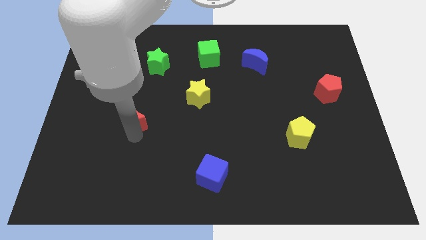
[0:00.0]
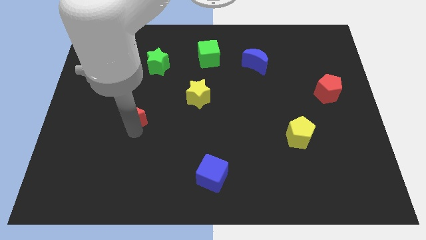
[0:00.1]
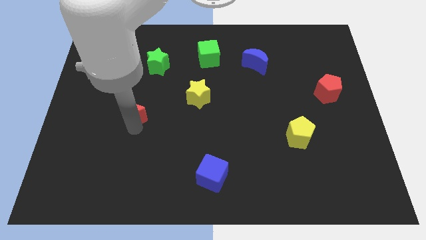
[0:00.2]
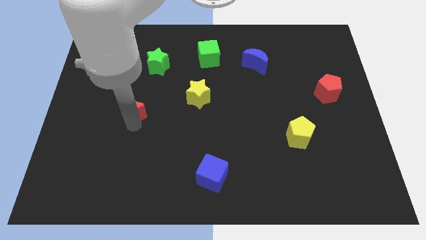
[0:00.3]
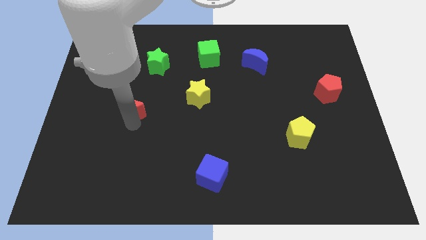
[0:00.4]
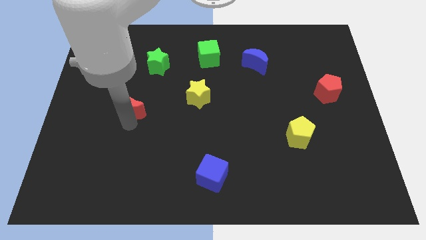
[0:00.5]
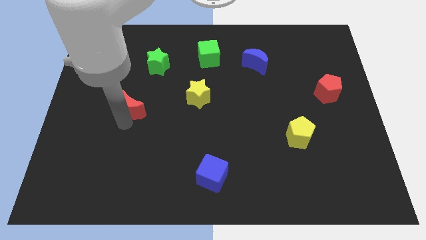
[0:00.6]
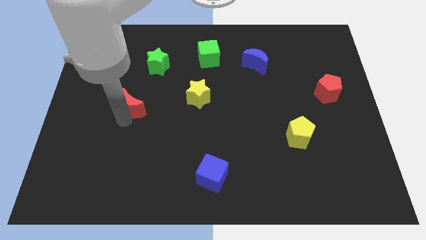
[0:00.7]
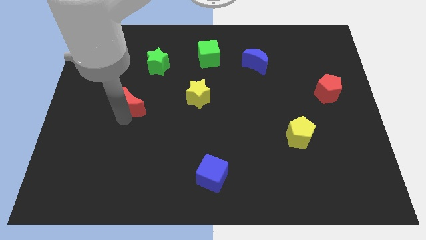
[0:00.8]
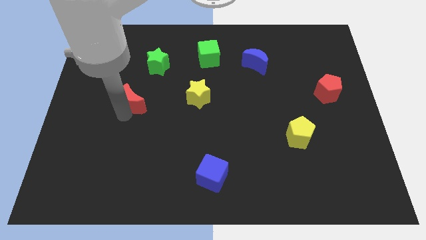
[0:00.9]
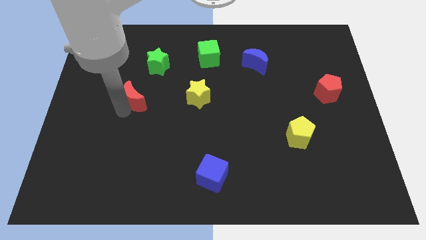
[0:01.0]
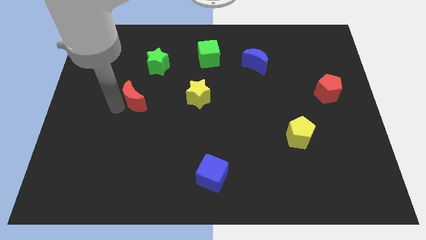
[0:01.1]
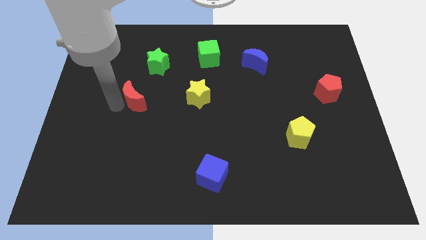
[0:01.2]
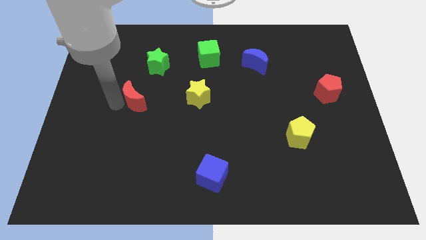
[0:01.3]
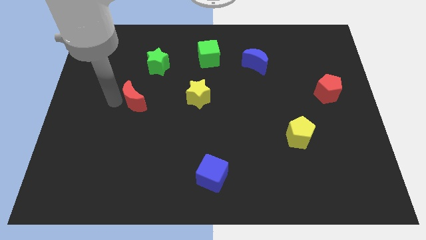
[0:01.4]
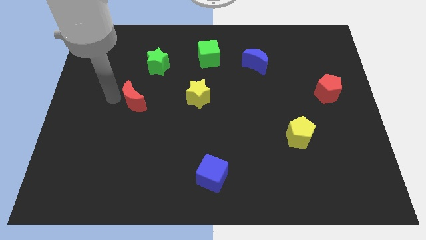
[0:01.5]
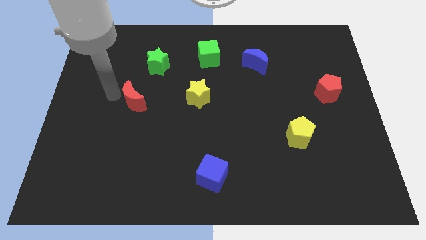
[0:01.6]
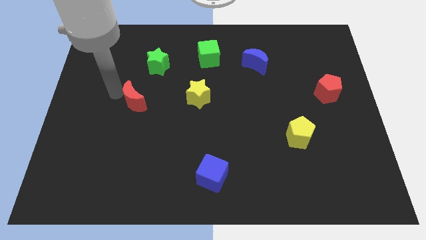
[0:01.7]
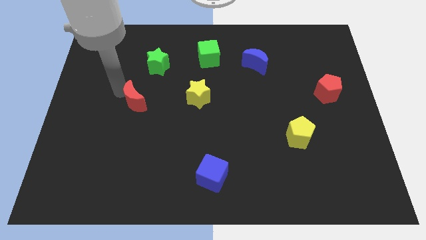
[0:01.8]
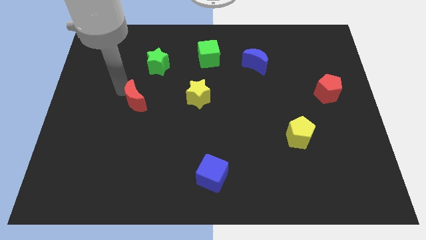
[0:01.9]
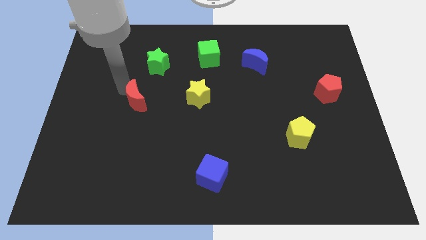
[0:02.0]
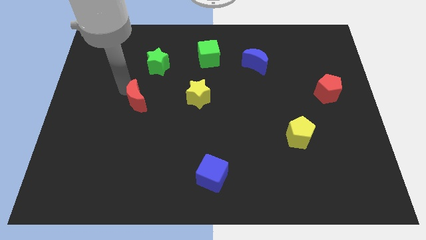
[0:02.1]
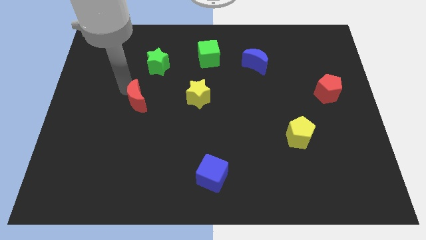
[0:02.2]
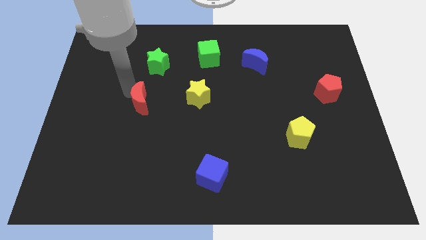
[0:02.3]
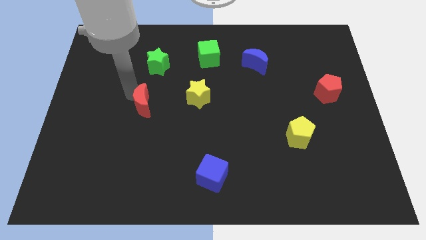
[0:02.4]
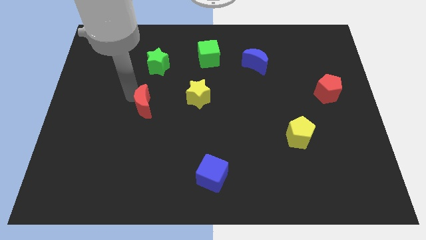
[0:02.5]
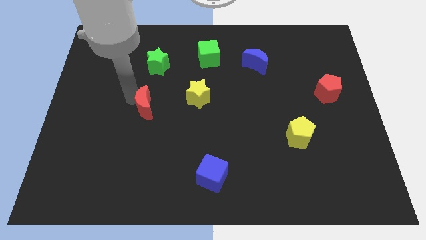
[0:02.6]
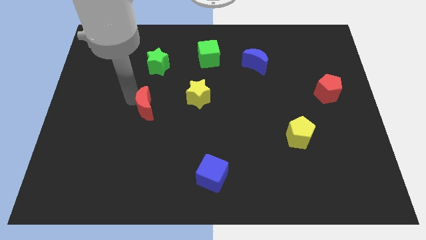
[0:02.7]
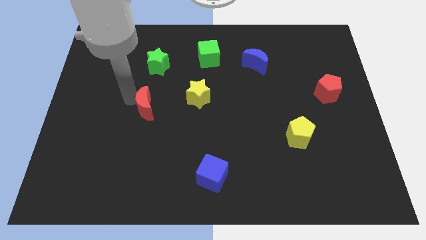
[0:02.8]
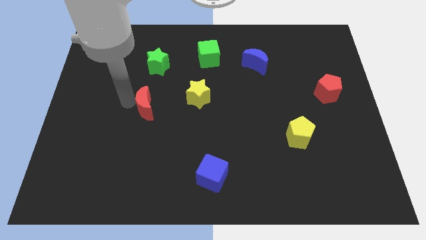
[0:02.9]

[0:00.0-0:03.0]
place the red moon left to the yellow star

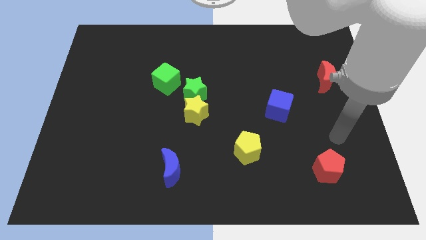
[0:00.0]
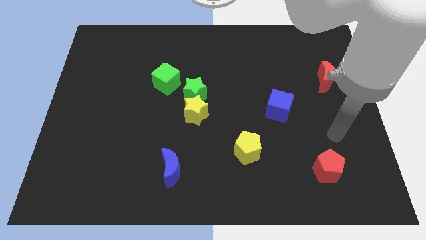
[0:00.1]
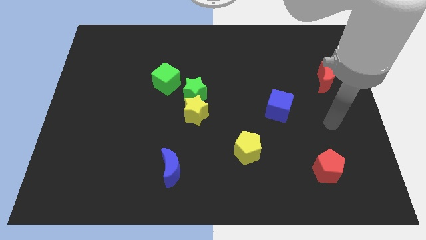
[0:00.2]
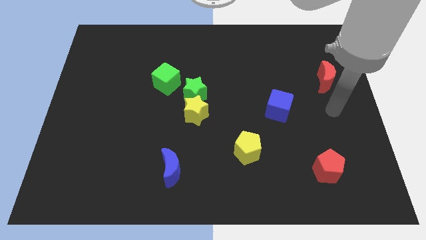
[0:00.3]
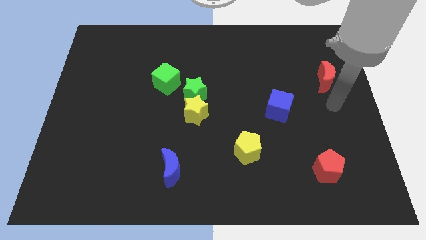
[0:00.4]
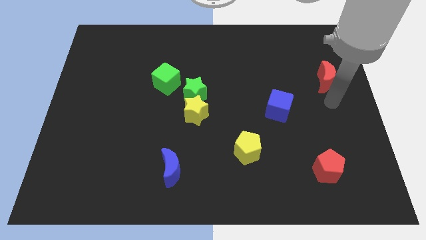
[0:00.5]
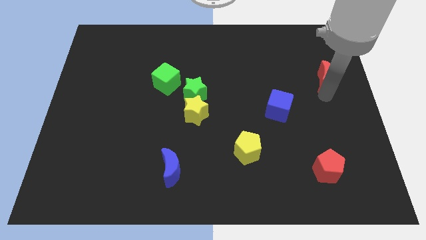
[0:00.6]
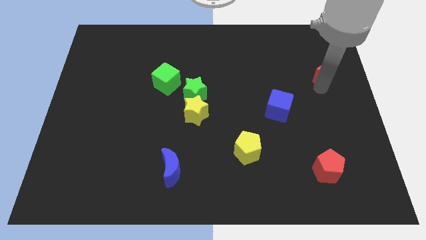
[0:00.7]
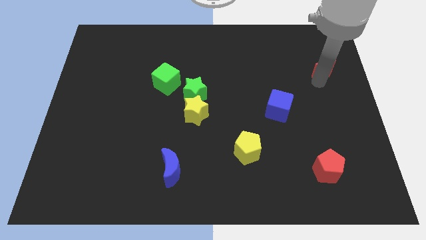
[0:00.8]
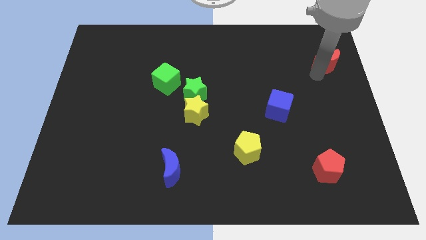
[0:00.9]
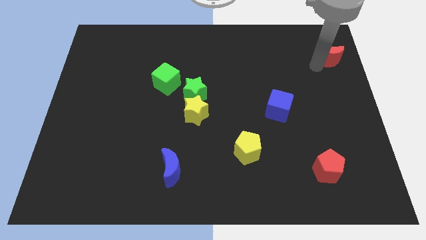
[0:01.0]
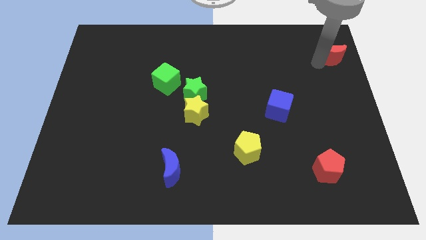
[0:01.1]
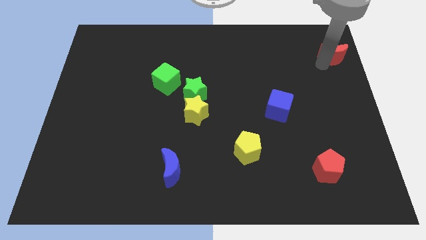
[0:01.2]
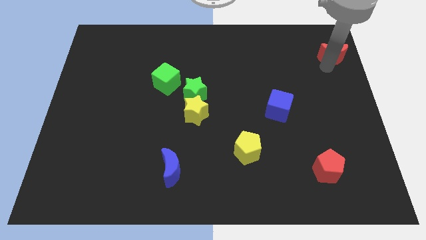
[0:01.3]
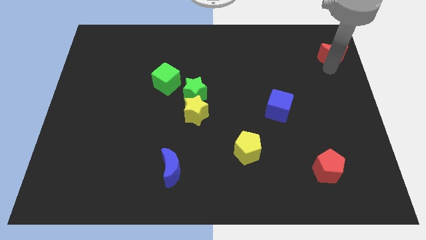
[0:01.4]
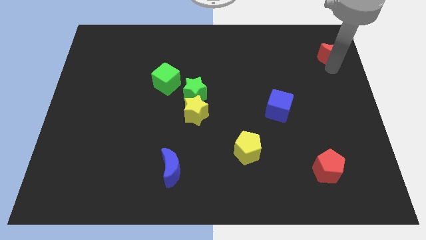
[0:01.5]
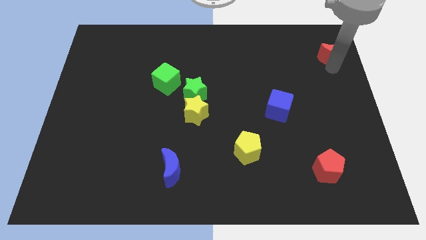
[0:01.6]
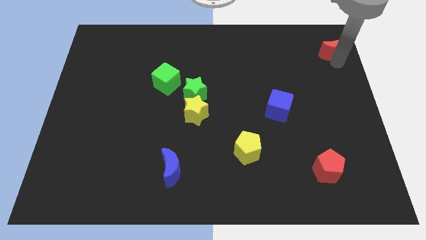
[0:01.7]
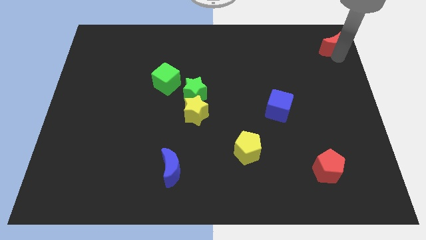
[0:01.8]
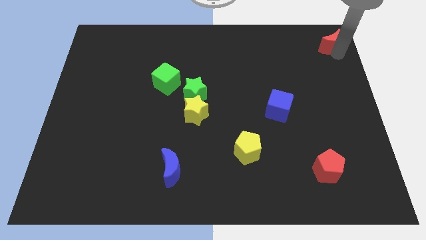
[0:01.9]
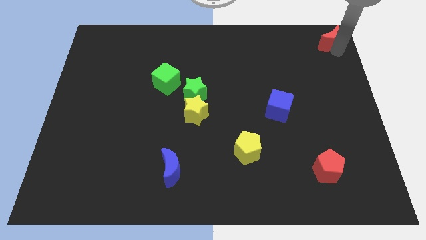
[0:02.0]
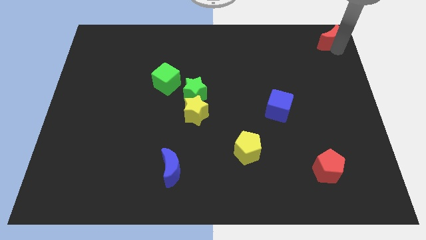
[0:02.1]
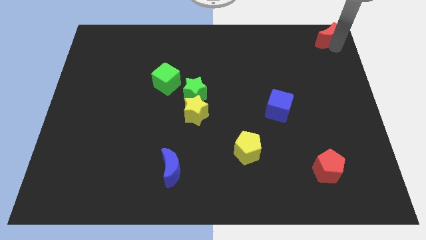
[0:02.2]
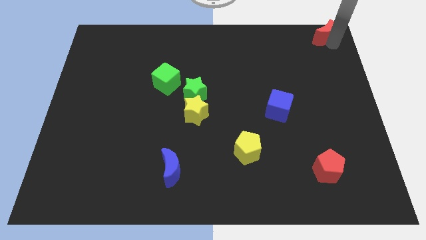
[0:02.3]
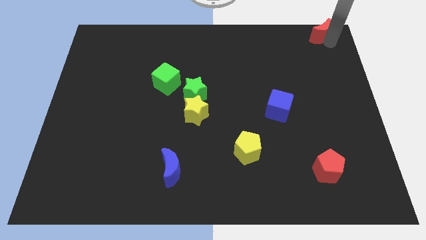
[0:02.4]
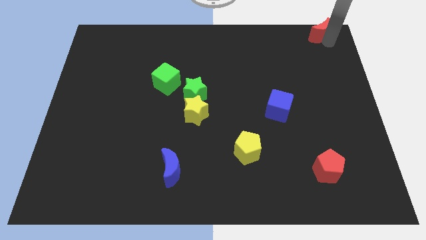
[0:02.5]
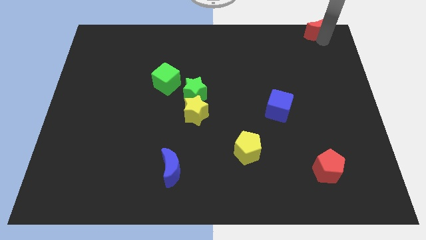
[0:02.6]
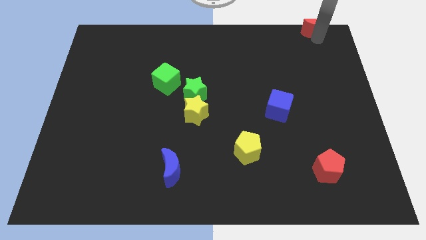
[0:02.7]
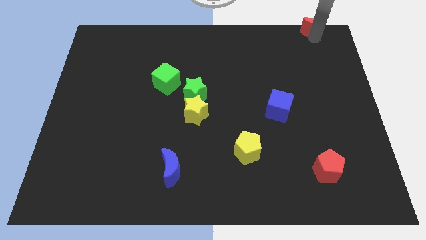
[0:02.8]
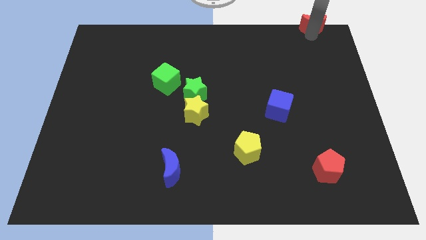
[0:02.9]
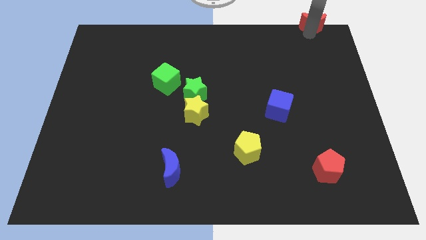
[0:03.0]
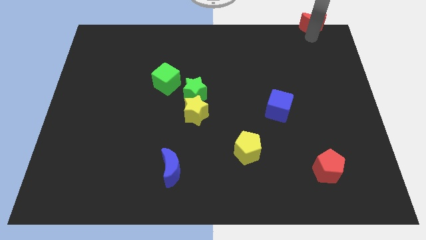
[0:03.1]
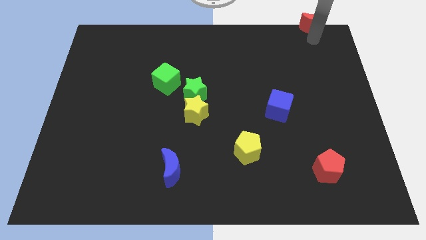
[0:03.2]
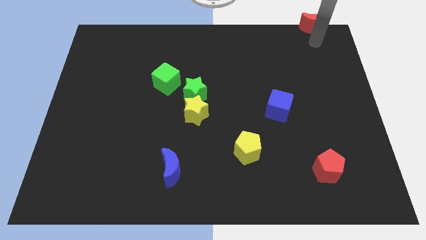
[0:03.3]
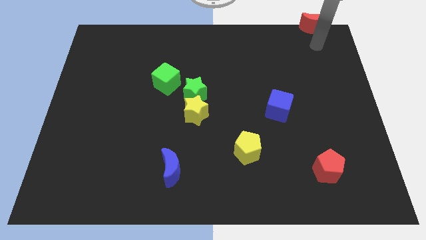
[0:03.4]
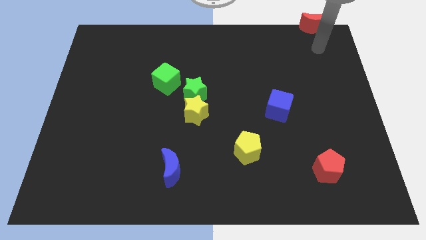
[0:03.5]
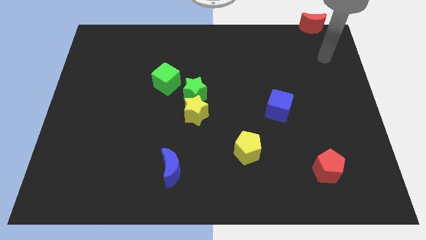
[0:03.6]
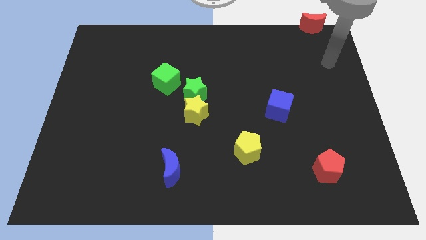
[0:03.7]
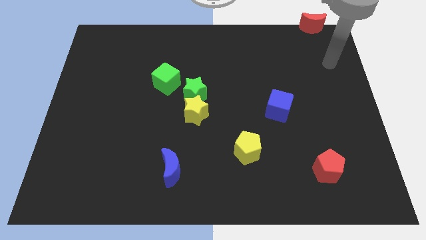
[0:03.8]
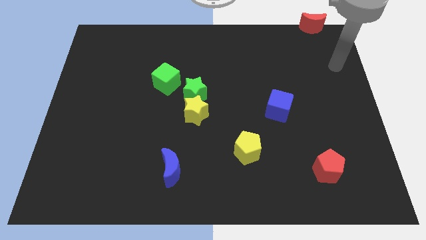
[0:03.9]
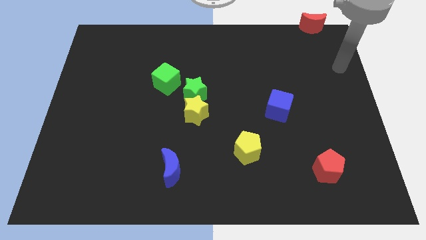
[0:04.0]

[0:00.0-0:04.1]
place the red pentagon to the top right side of the board

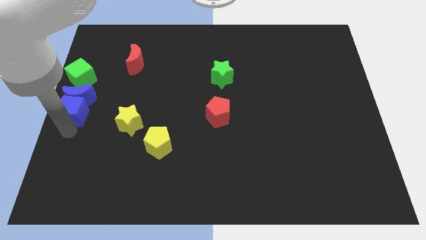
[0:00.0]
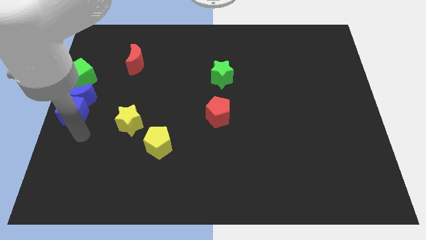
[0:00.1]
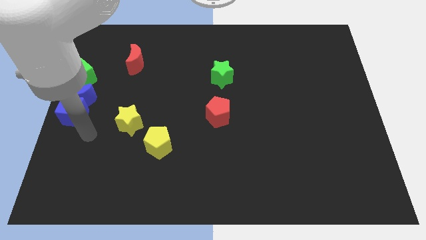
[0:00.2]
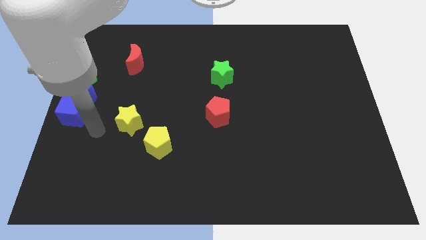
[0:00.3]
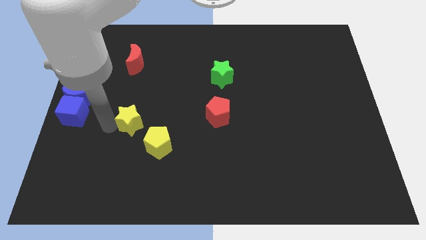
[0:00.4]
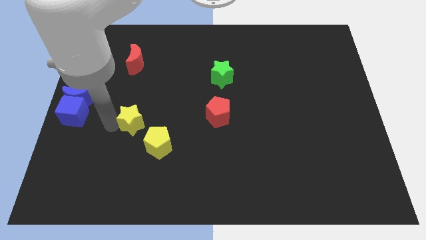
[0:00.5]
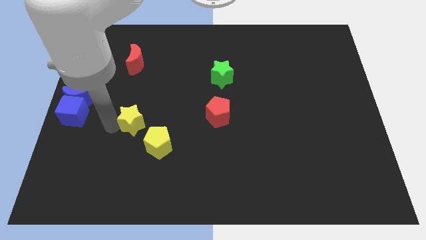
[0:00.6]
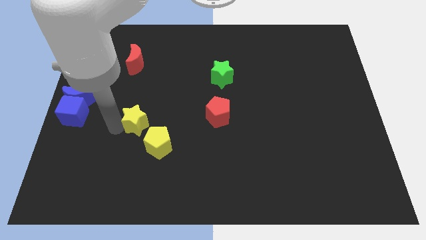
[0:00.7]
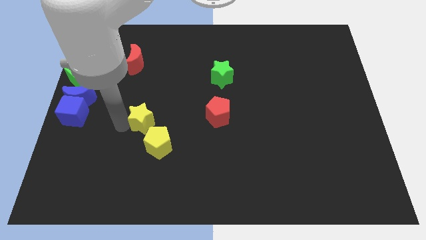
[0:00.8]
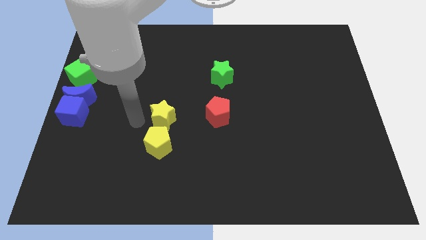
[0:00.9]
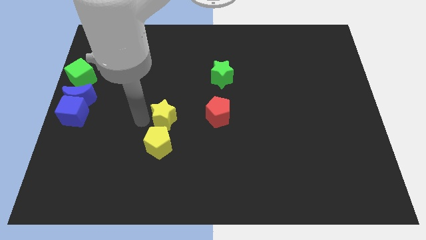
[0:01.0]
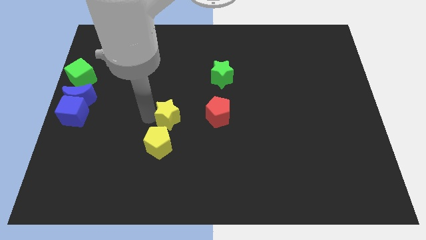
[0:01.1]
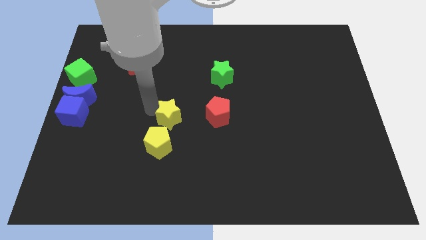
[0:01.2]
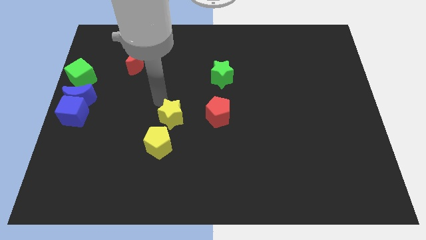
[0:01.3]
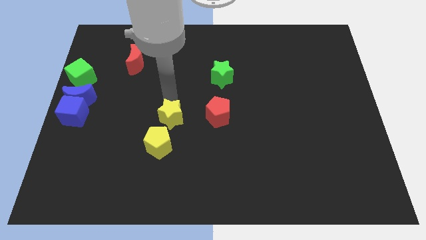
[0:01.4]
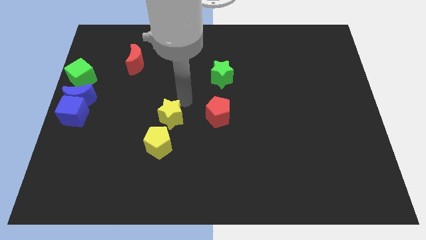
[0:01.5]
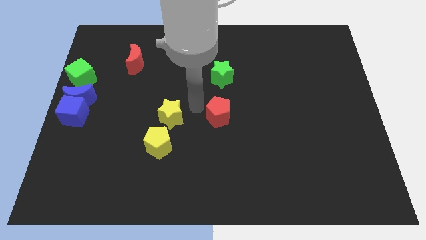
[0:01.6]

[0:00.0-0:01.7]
push the yellow star towards the red pentagon

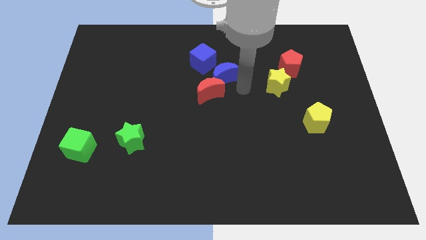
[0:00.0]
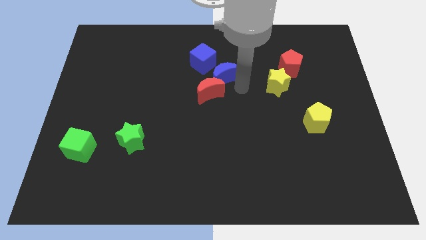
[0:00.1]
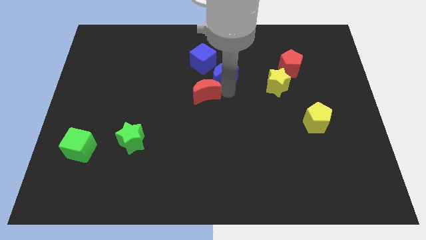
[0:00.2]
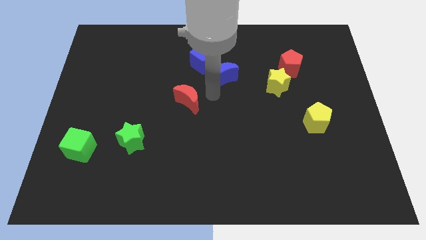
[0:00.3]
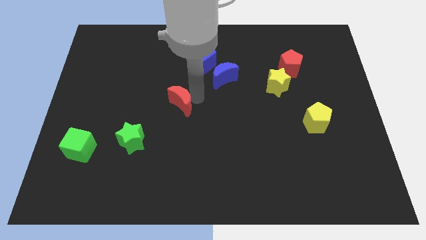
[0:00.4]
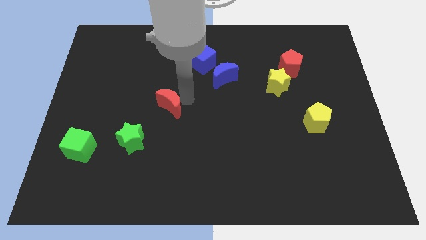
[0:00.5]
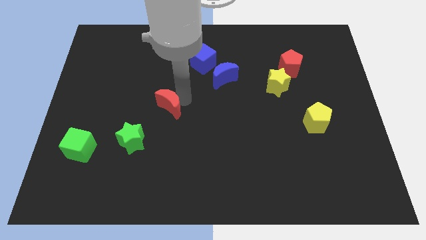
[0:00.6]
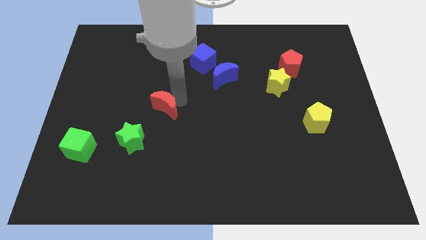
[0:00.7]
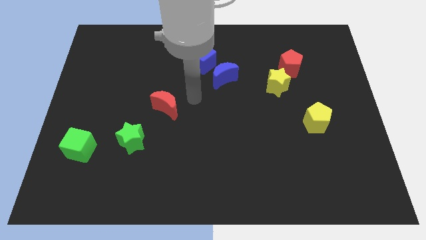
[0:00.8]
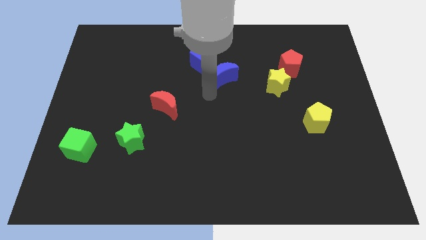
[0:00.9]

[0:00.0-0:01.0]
move red moon from blue crescents
